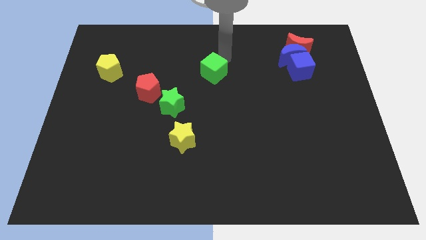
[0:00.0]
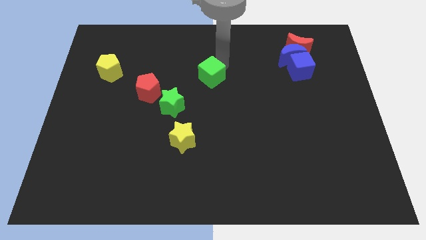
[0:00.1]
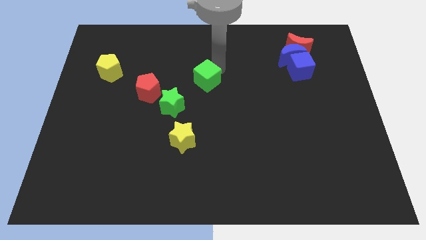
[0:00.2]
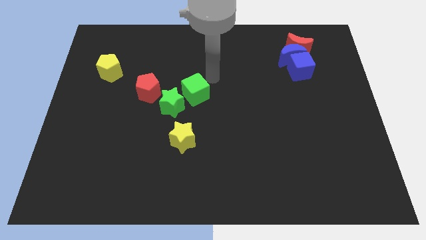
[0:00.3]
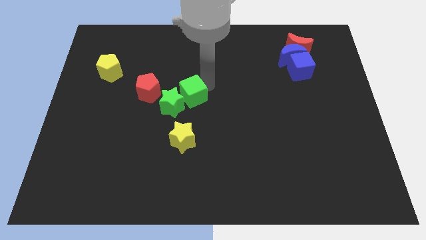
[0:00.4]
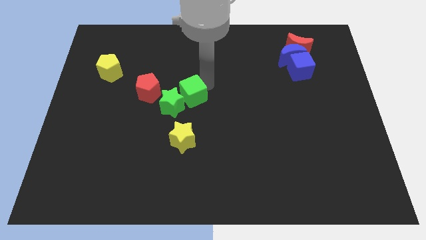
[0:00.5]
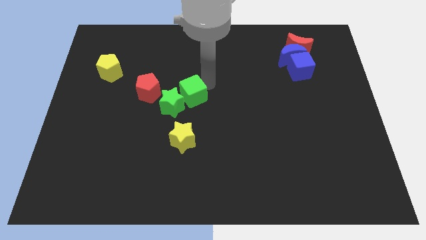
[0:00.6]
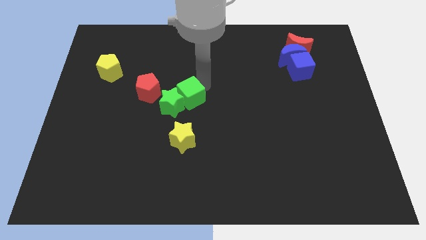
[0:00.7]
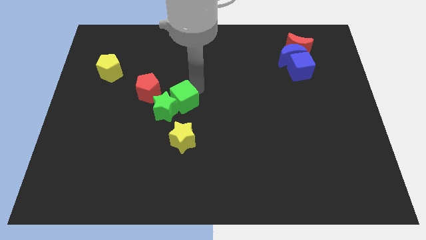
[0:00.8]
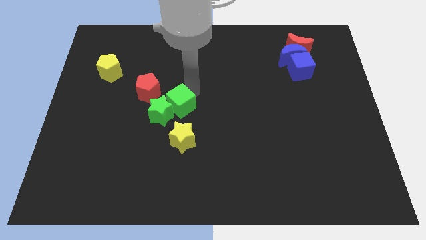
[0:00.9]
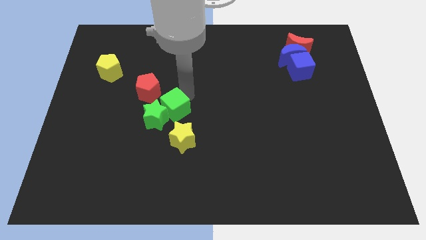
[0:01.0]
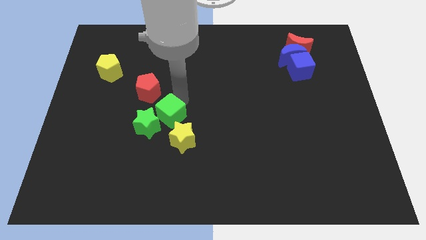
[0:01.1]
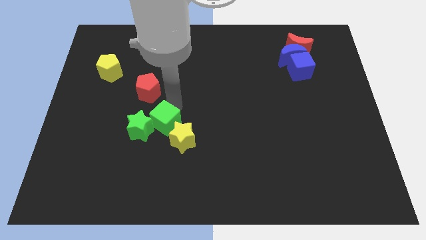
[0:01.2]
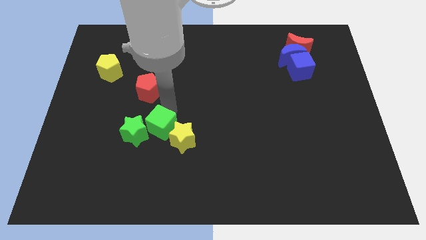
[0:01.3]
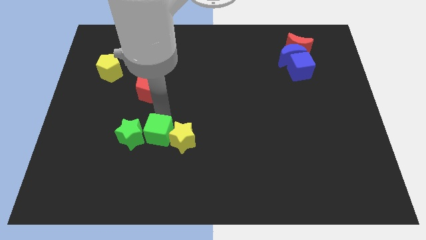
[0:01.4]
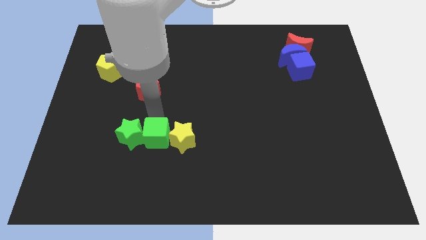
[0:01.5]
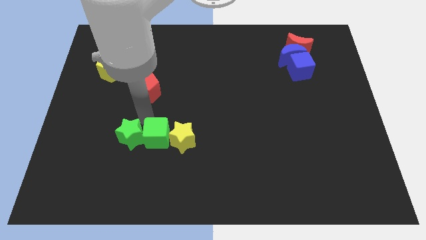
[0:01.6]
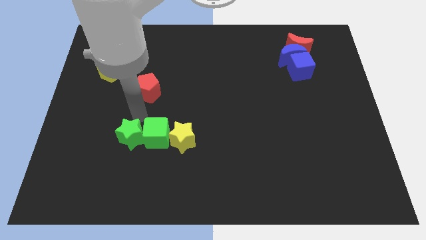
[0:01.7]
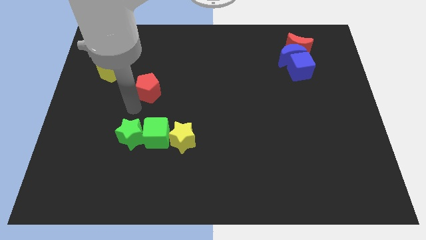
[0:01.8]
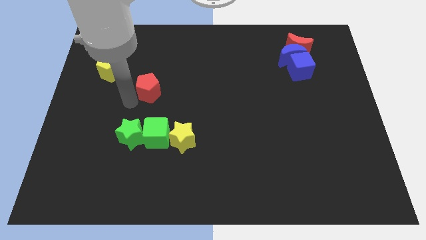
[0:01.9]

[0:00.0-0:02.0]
place the green blocks left to the yellow star

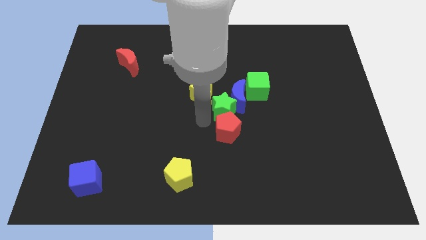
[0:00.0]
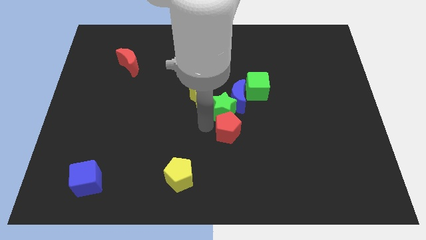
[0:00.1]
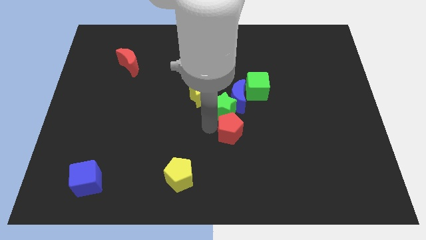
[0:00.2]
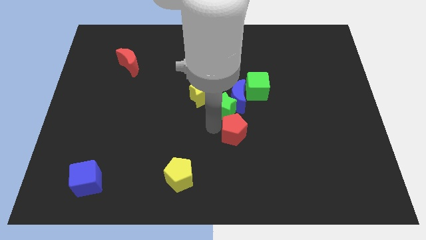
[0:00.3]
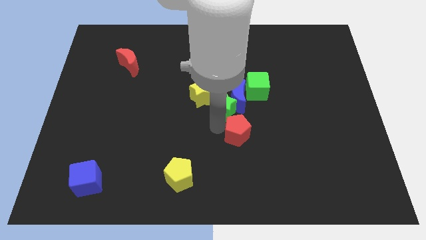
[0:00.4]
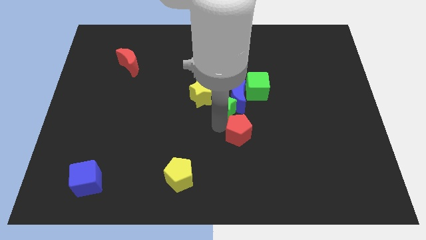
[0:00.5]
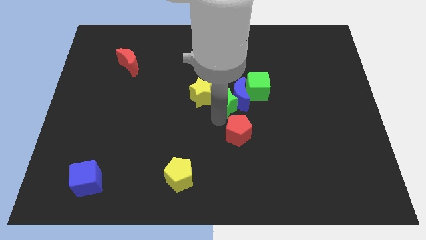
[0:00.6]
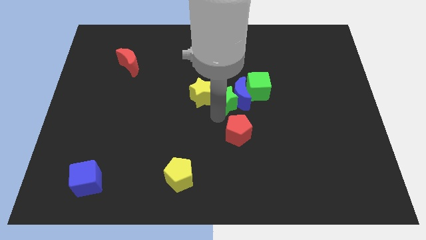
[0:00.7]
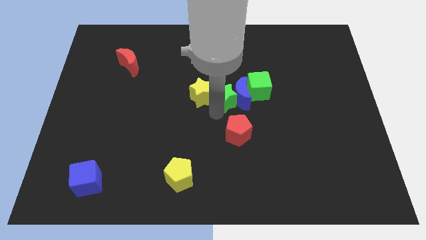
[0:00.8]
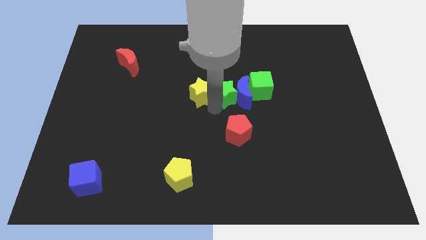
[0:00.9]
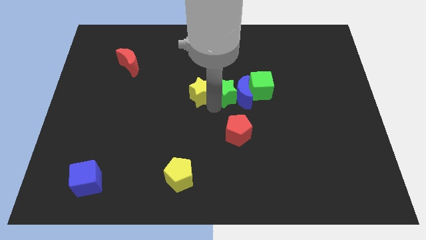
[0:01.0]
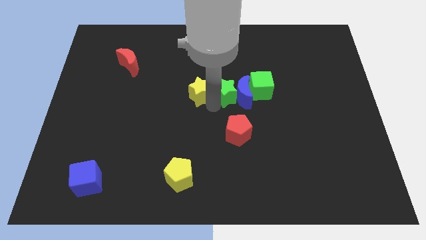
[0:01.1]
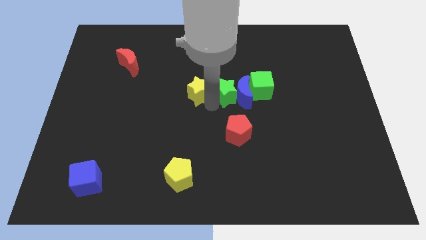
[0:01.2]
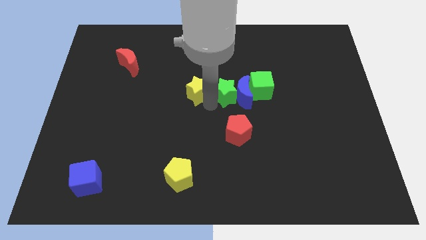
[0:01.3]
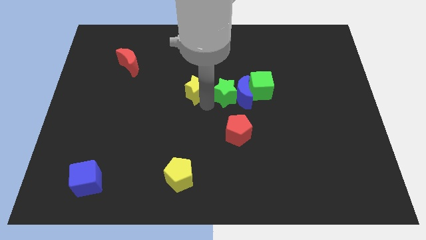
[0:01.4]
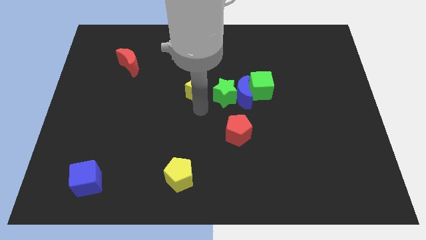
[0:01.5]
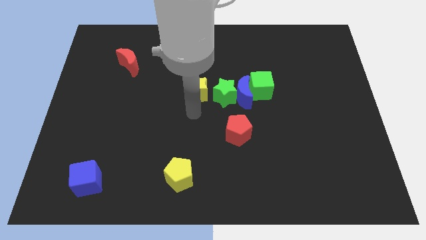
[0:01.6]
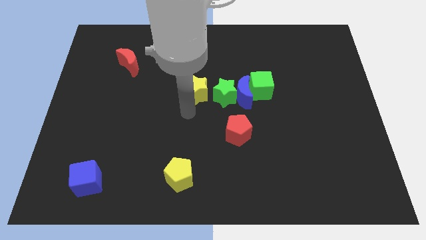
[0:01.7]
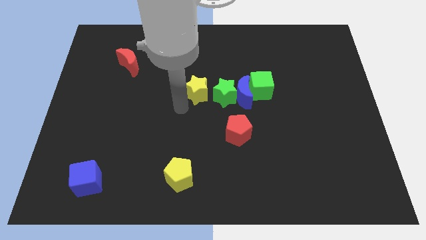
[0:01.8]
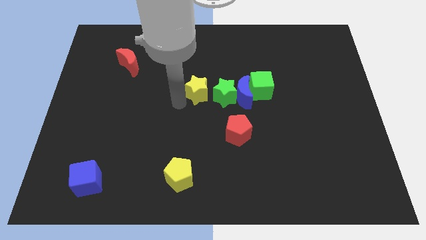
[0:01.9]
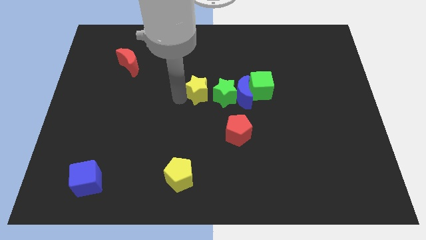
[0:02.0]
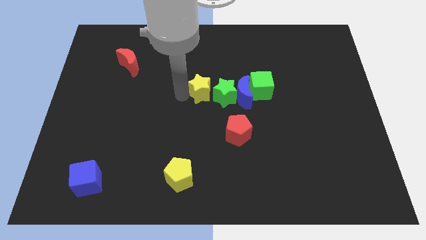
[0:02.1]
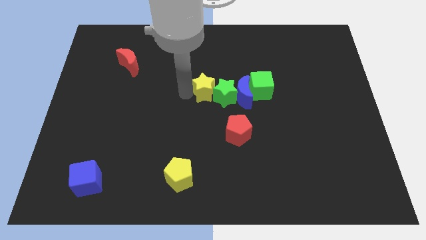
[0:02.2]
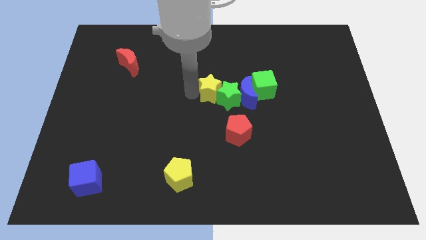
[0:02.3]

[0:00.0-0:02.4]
point your arm to the left of yellow star

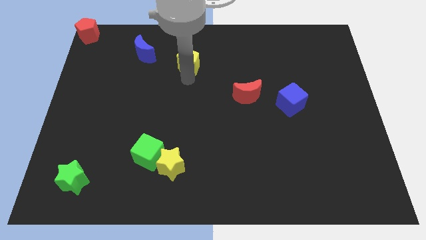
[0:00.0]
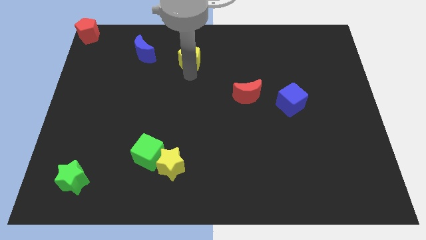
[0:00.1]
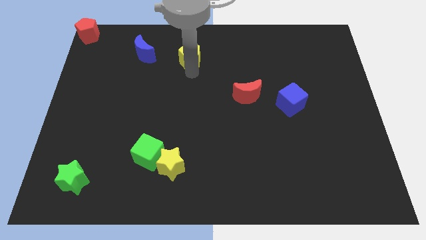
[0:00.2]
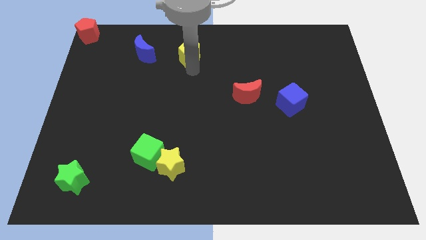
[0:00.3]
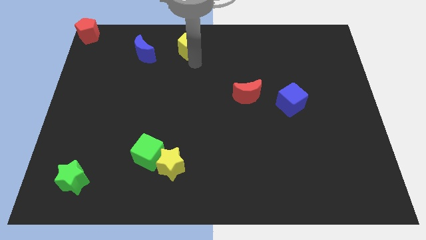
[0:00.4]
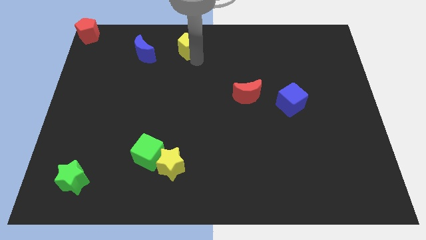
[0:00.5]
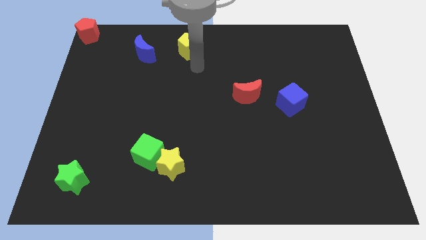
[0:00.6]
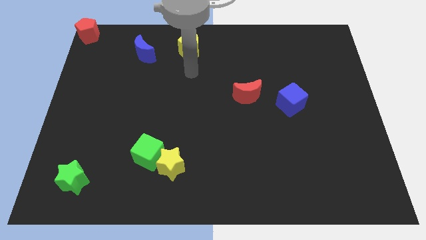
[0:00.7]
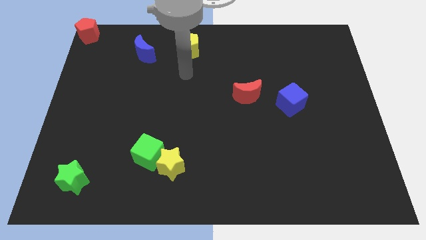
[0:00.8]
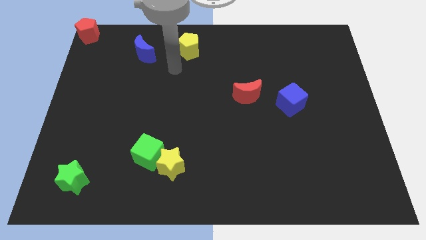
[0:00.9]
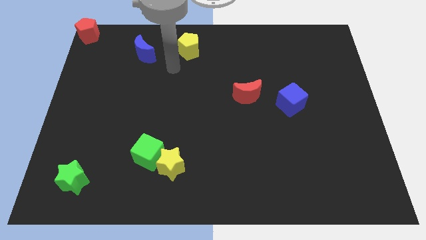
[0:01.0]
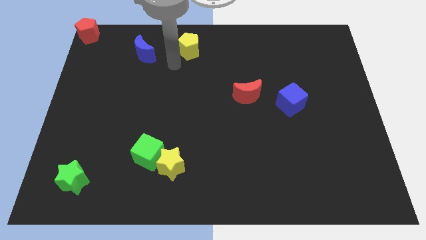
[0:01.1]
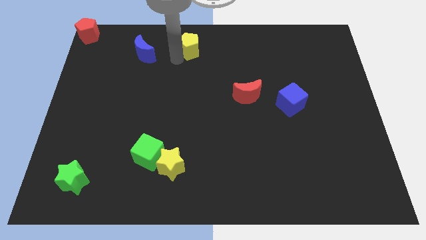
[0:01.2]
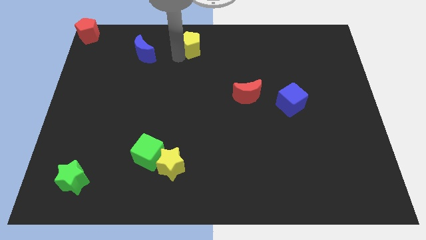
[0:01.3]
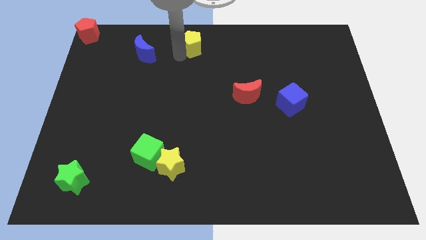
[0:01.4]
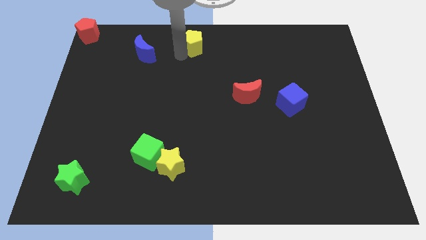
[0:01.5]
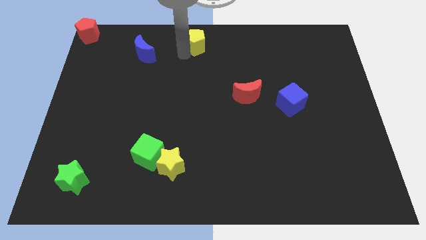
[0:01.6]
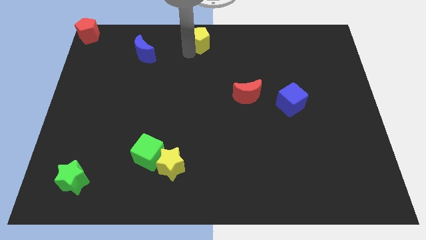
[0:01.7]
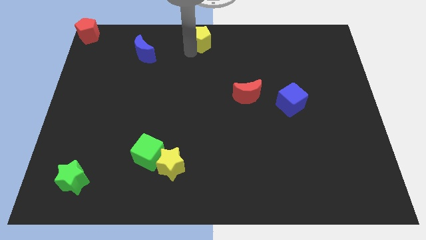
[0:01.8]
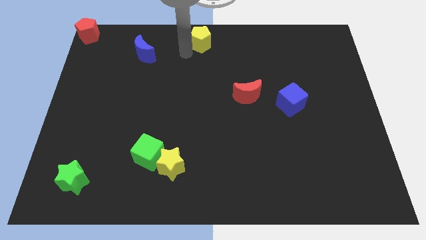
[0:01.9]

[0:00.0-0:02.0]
push the yellow pentagon to the top center of the board

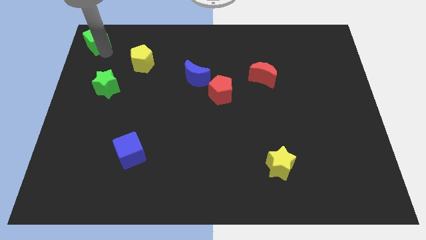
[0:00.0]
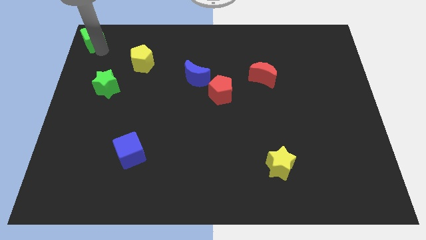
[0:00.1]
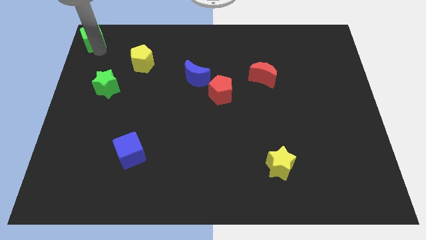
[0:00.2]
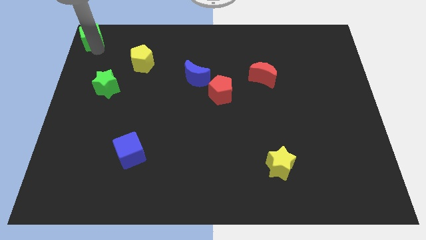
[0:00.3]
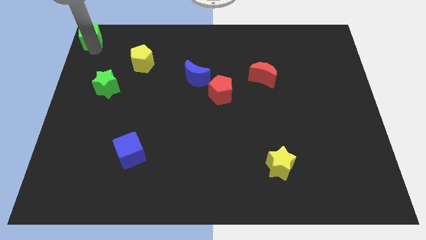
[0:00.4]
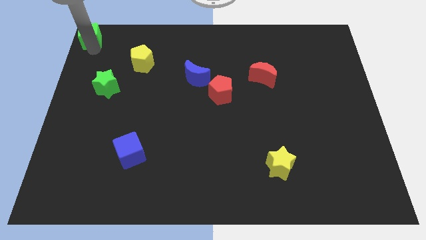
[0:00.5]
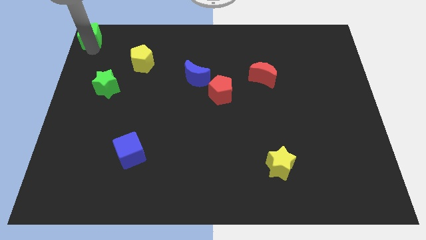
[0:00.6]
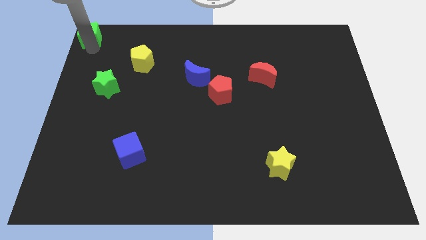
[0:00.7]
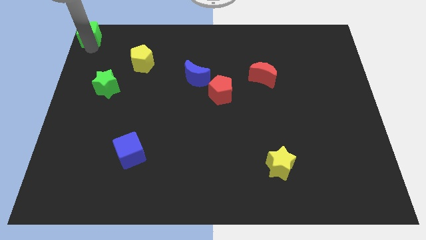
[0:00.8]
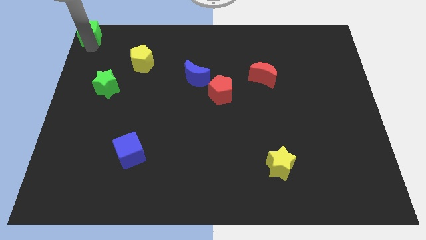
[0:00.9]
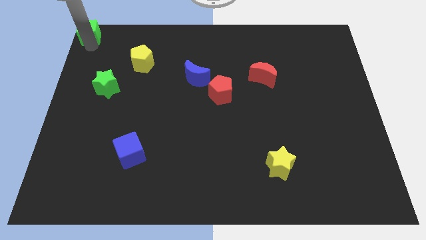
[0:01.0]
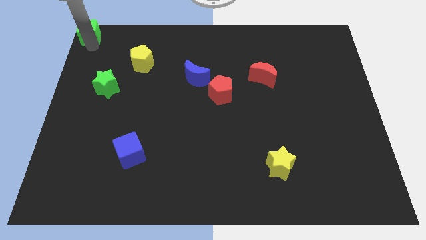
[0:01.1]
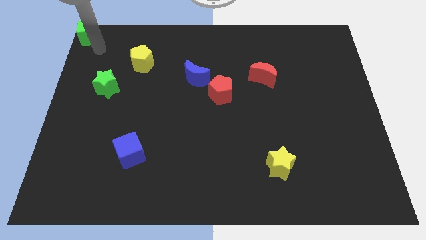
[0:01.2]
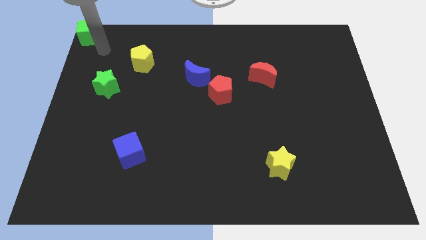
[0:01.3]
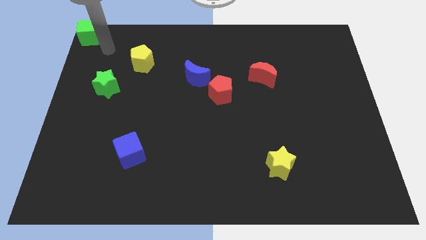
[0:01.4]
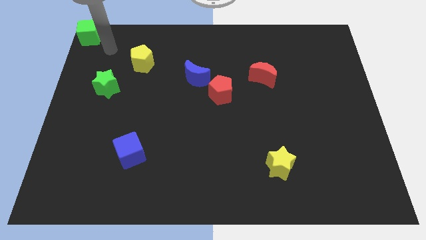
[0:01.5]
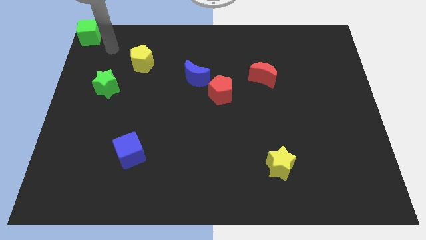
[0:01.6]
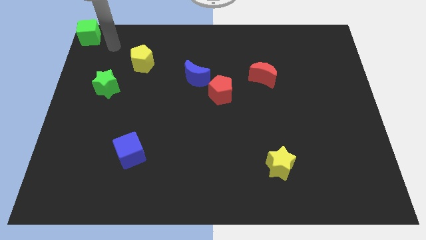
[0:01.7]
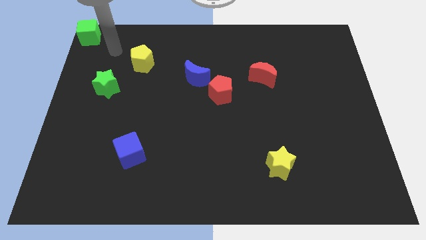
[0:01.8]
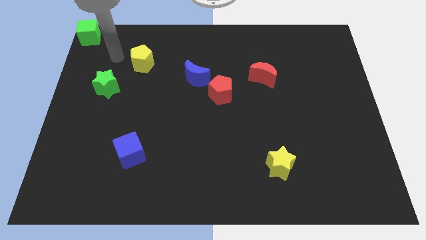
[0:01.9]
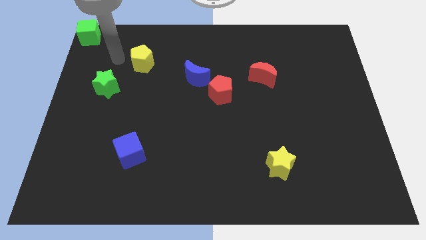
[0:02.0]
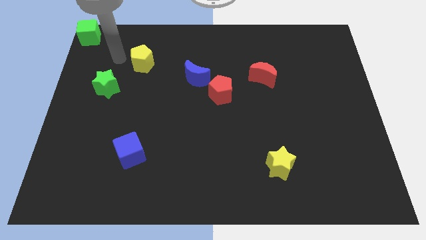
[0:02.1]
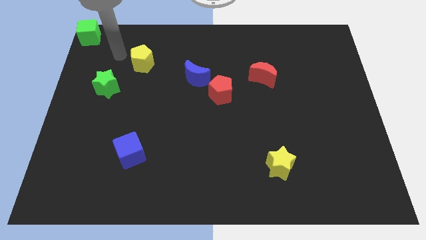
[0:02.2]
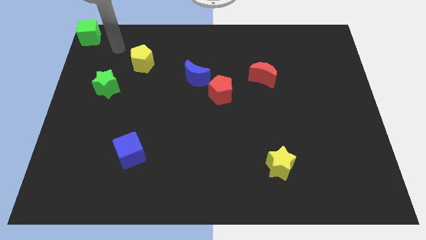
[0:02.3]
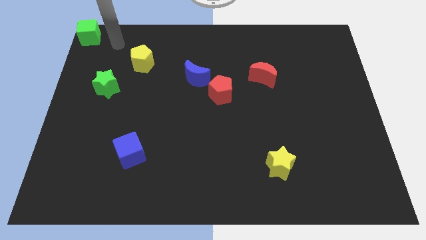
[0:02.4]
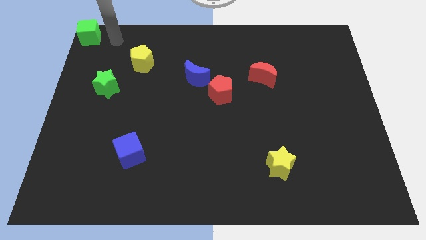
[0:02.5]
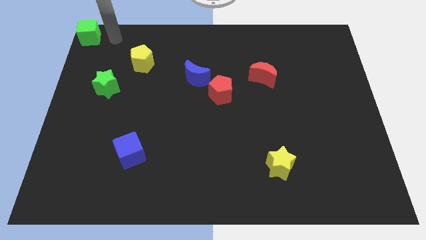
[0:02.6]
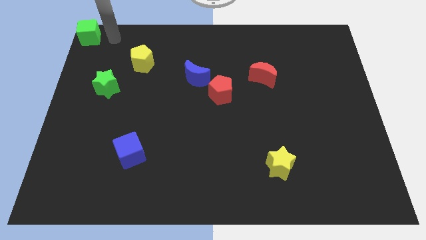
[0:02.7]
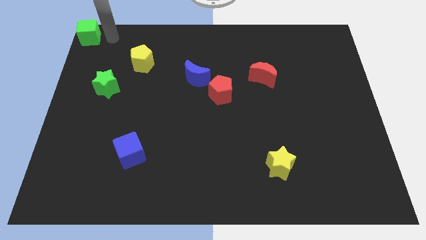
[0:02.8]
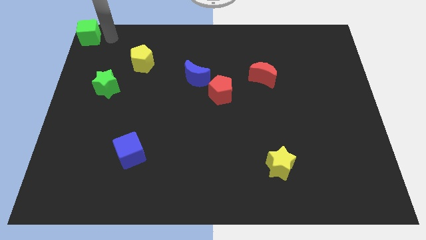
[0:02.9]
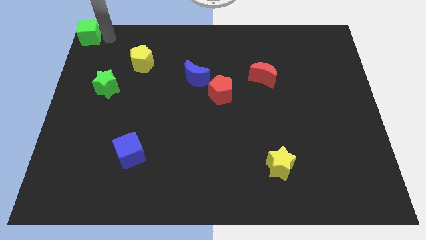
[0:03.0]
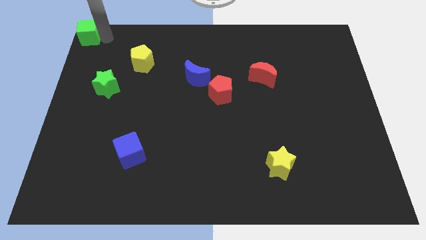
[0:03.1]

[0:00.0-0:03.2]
push the green cube diagonally above the green star
